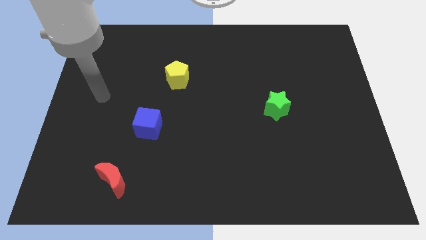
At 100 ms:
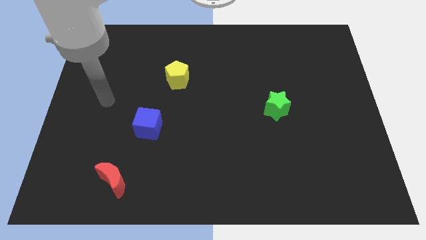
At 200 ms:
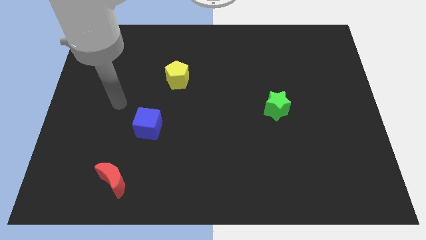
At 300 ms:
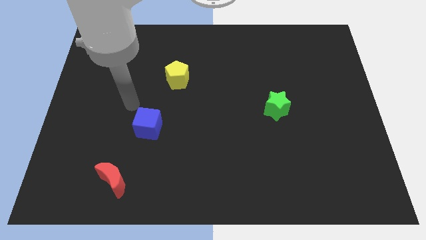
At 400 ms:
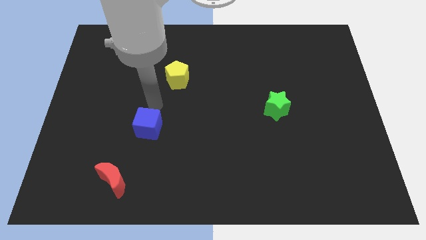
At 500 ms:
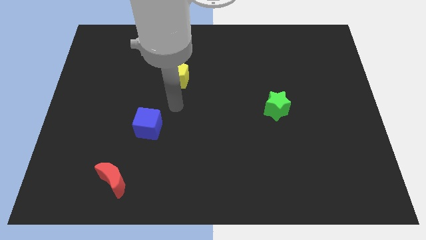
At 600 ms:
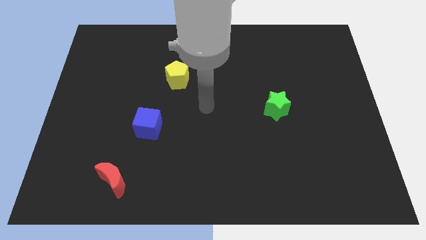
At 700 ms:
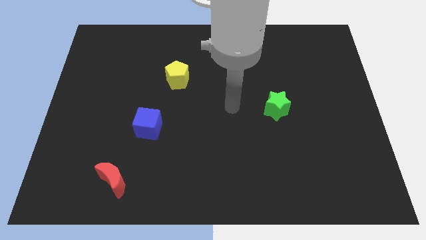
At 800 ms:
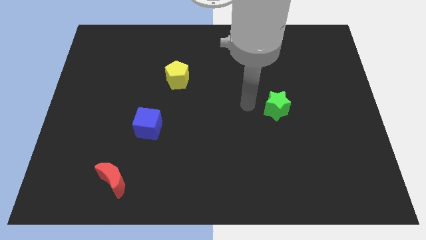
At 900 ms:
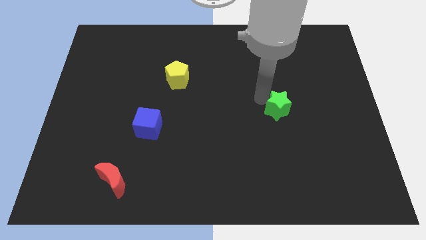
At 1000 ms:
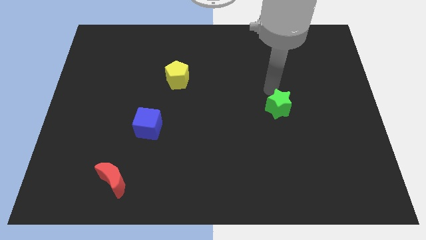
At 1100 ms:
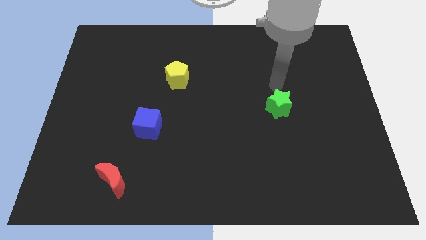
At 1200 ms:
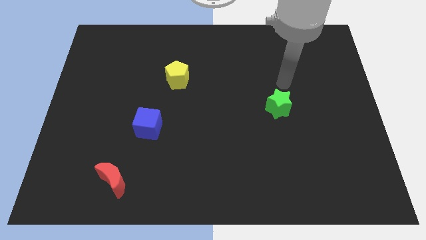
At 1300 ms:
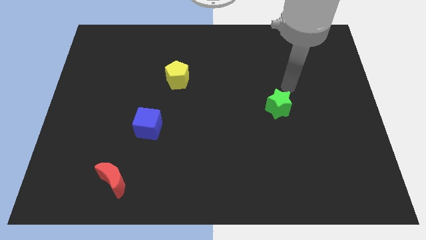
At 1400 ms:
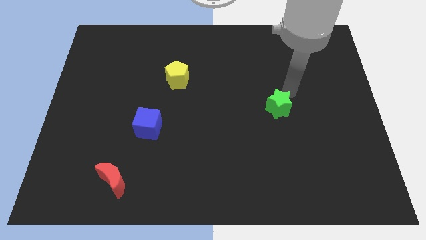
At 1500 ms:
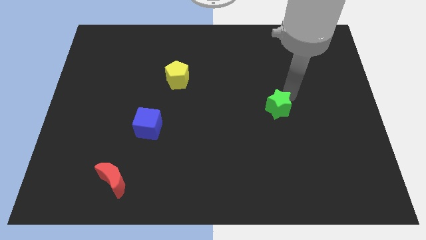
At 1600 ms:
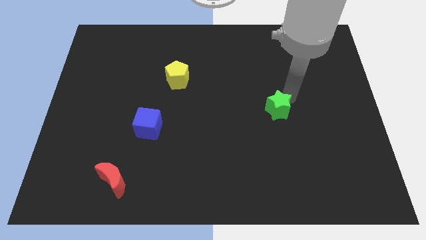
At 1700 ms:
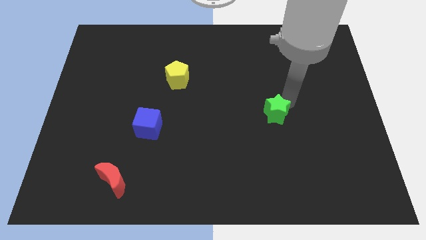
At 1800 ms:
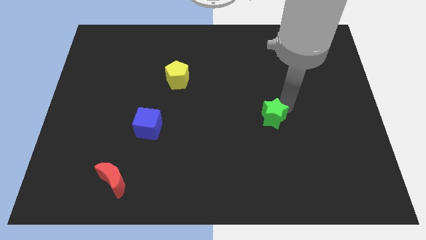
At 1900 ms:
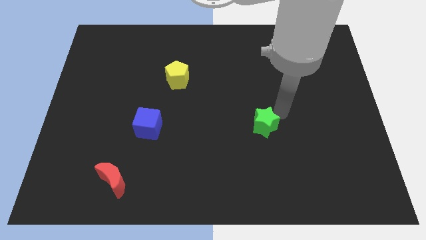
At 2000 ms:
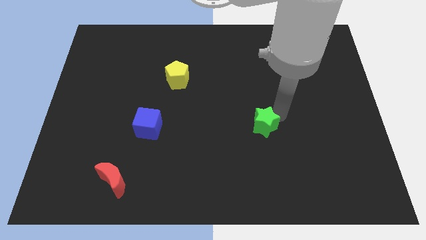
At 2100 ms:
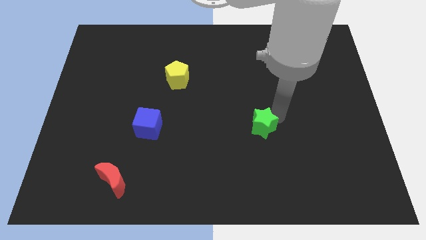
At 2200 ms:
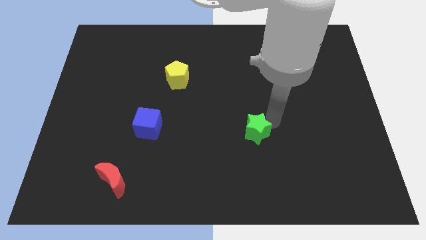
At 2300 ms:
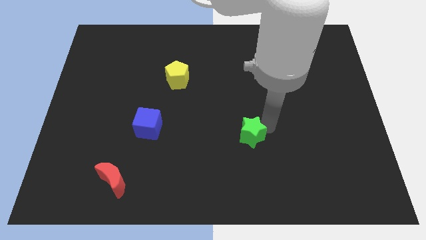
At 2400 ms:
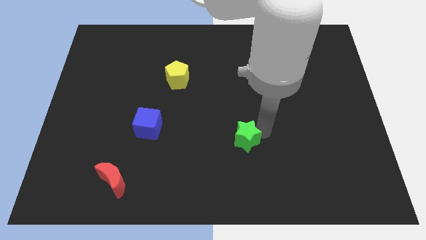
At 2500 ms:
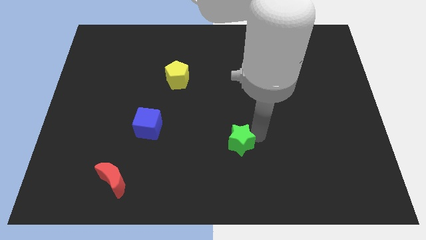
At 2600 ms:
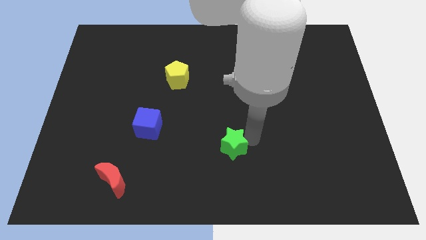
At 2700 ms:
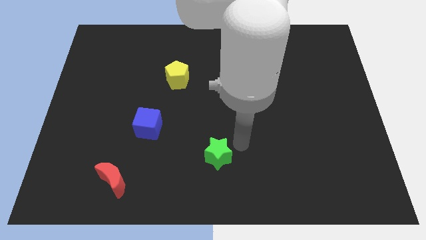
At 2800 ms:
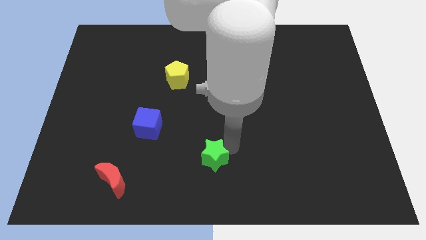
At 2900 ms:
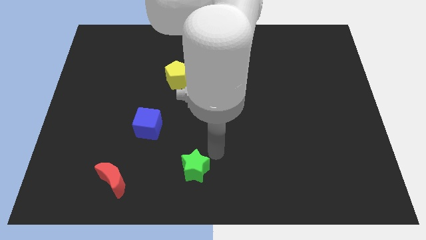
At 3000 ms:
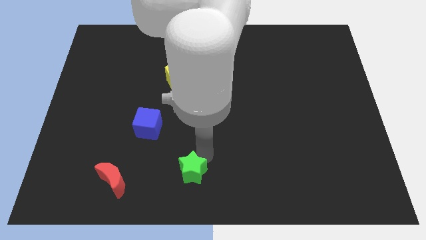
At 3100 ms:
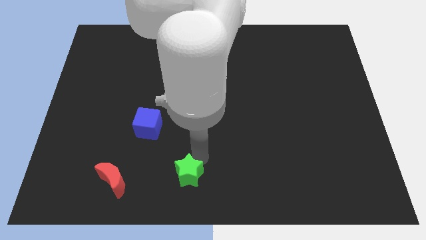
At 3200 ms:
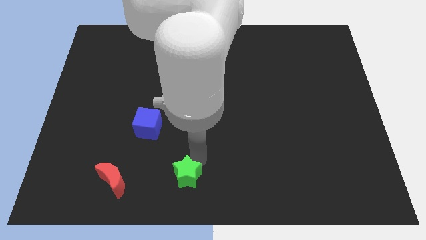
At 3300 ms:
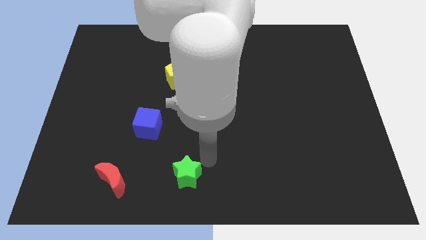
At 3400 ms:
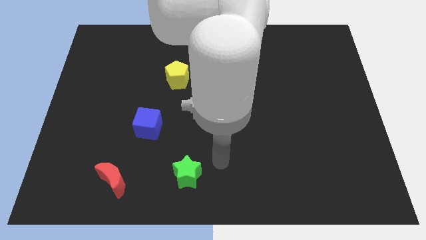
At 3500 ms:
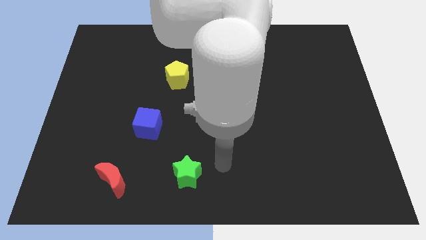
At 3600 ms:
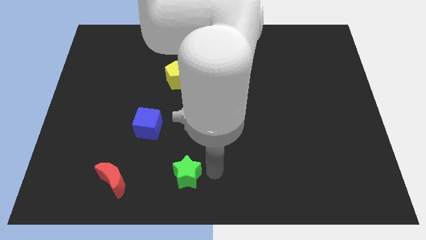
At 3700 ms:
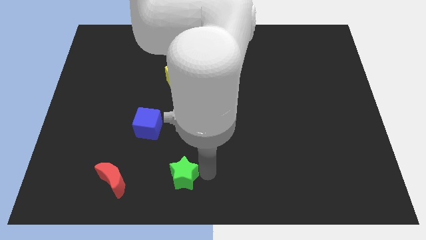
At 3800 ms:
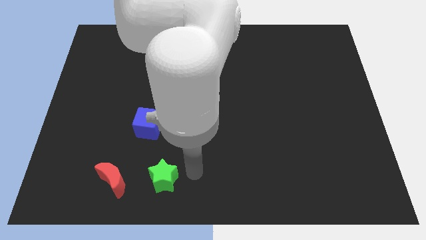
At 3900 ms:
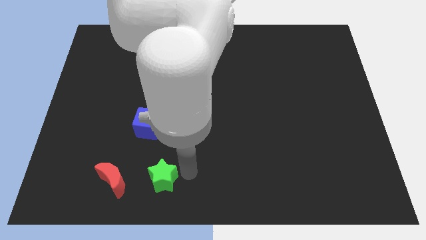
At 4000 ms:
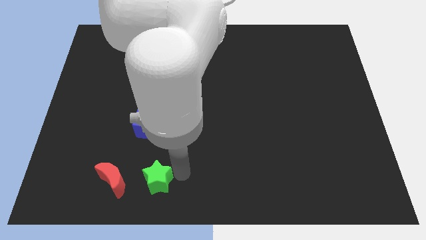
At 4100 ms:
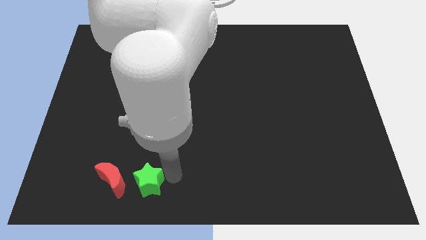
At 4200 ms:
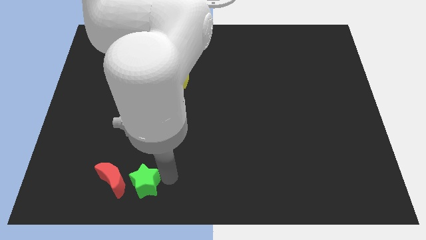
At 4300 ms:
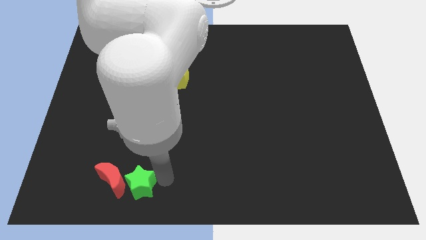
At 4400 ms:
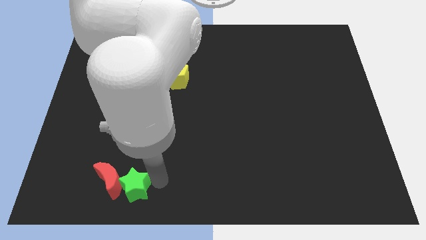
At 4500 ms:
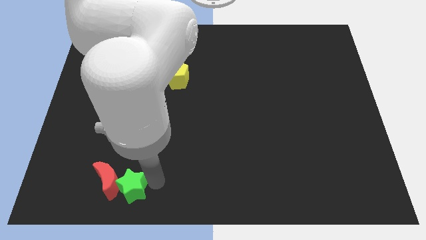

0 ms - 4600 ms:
move the star towards the red block

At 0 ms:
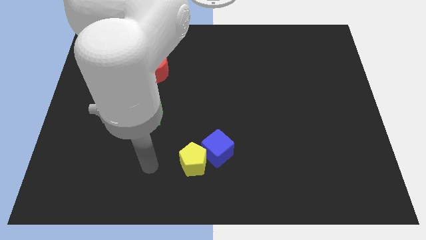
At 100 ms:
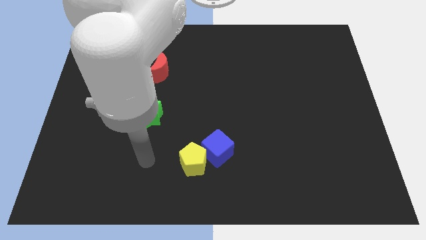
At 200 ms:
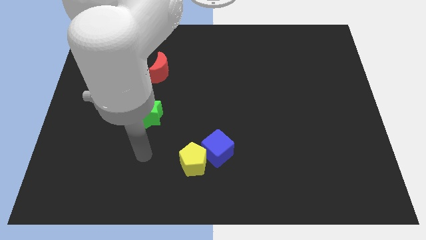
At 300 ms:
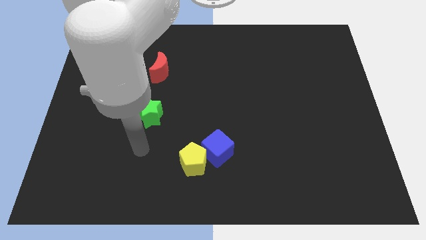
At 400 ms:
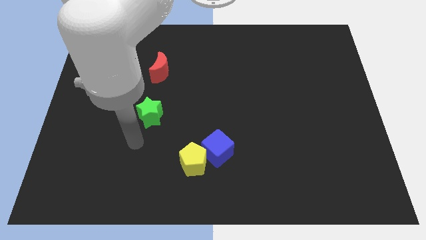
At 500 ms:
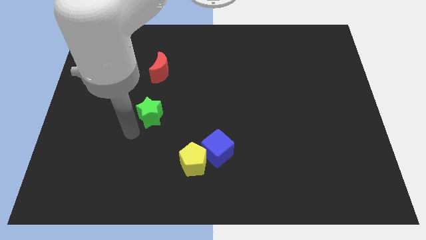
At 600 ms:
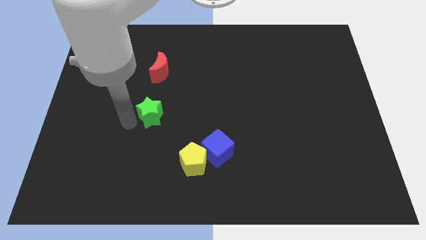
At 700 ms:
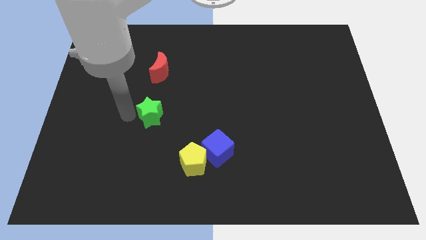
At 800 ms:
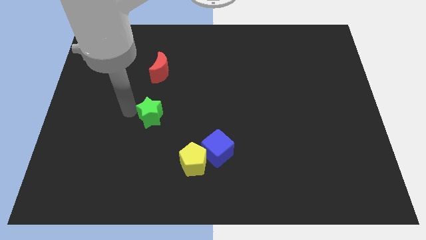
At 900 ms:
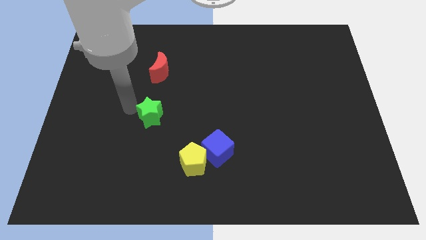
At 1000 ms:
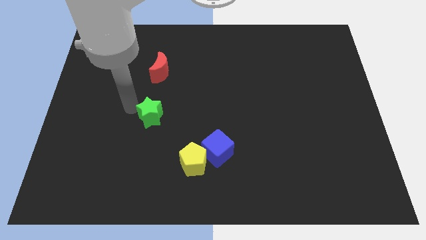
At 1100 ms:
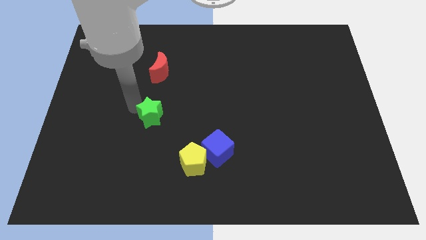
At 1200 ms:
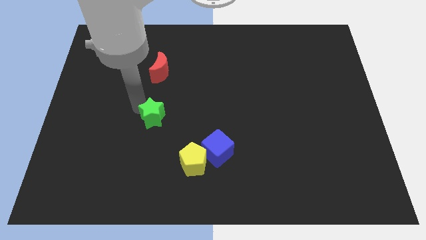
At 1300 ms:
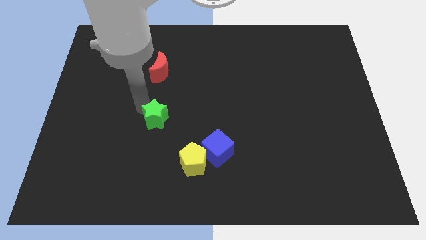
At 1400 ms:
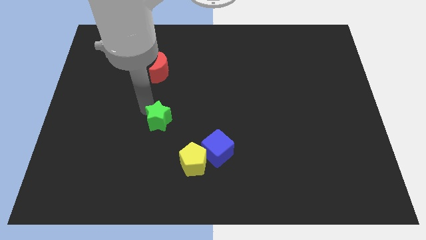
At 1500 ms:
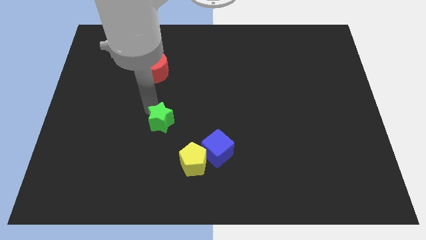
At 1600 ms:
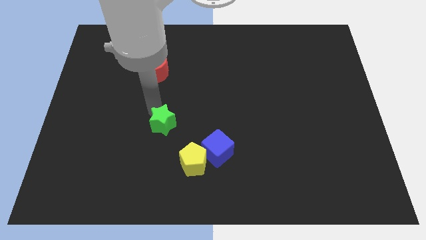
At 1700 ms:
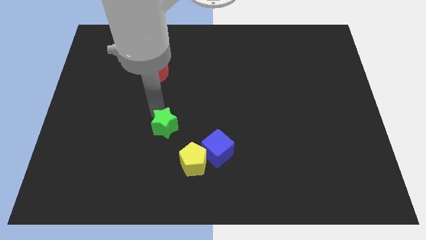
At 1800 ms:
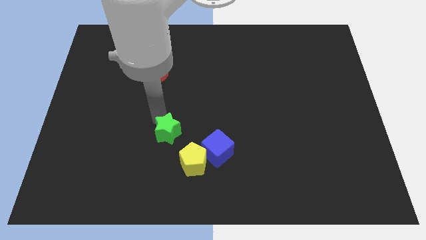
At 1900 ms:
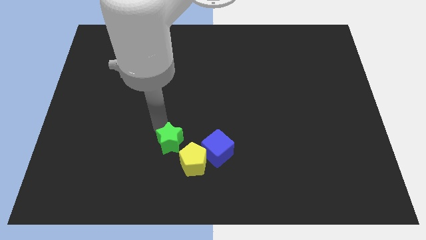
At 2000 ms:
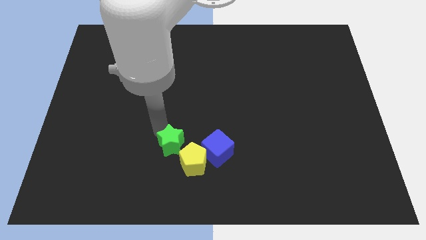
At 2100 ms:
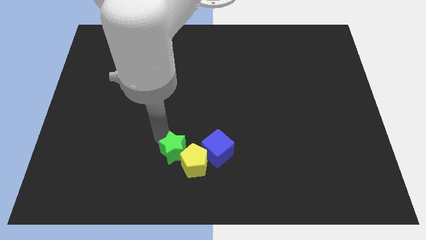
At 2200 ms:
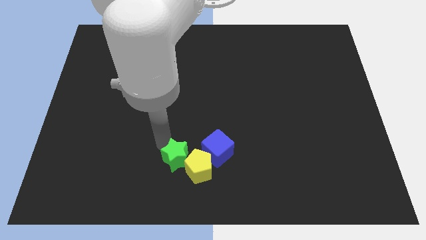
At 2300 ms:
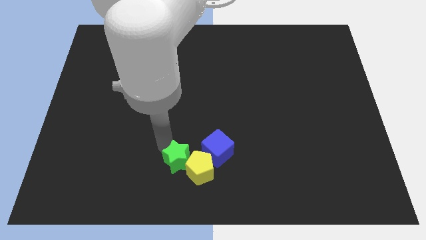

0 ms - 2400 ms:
put the star to the pentagon

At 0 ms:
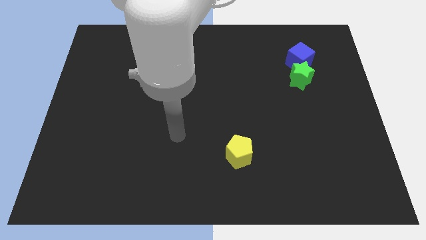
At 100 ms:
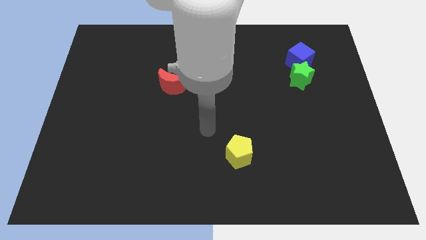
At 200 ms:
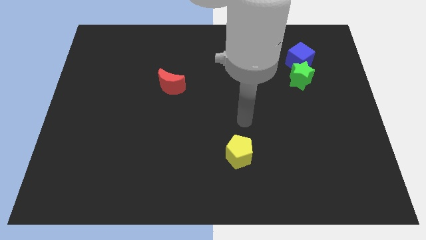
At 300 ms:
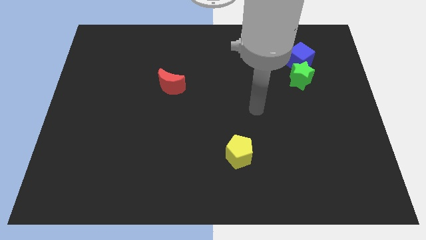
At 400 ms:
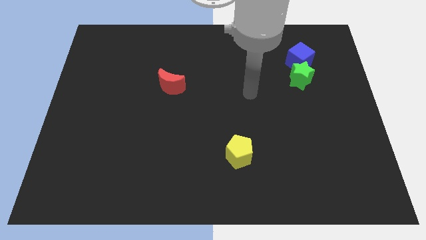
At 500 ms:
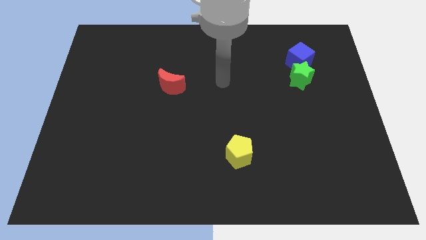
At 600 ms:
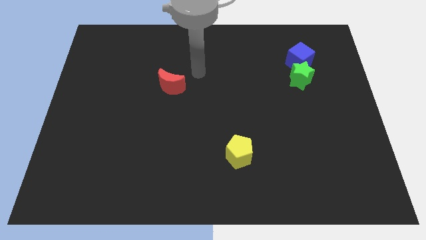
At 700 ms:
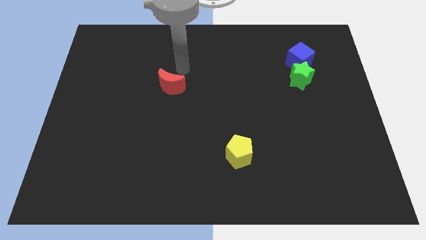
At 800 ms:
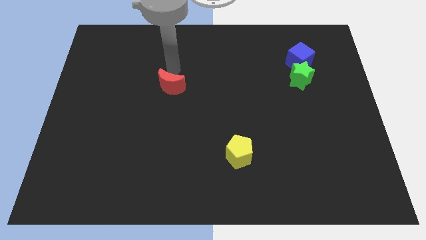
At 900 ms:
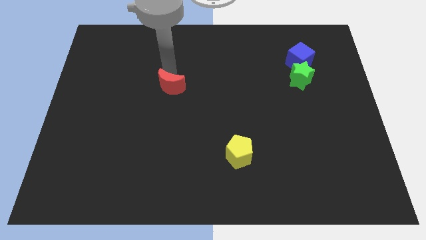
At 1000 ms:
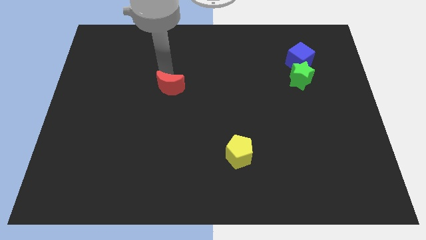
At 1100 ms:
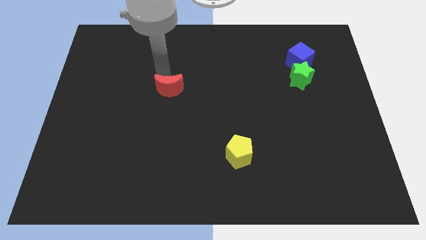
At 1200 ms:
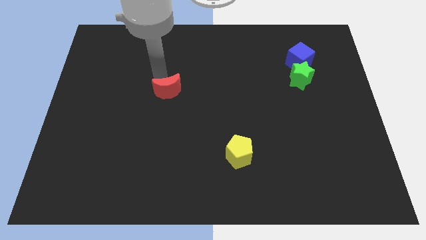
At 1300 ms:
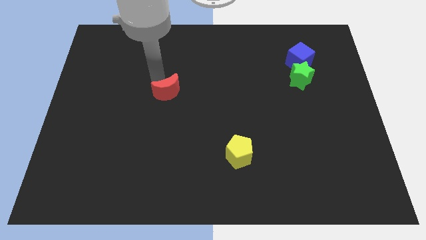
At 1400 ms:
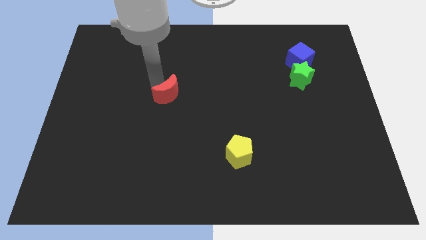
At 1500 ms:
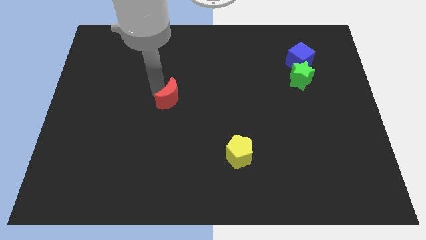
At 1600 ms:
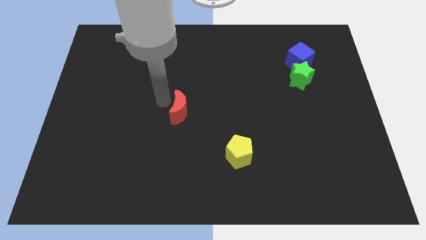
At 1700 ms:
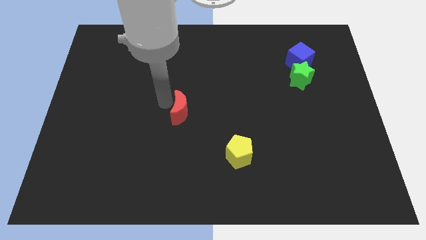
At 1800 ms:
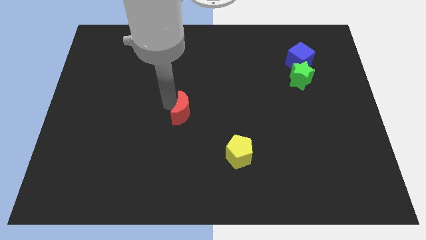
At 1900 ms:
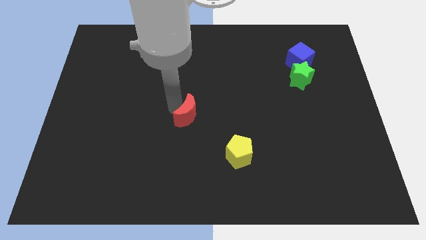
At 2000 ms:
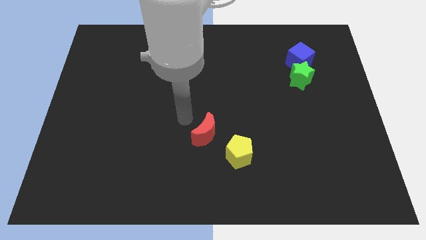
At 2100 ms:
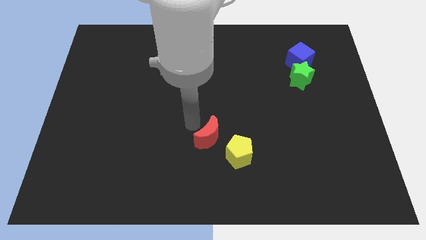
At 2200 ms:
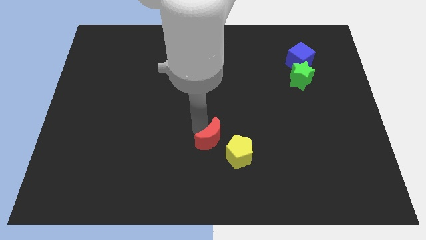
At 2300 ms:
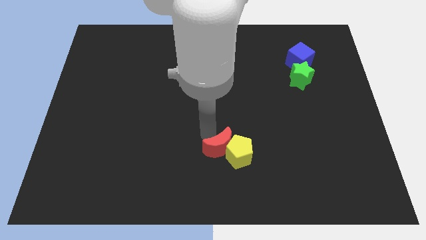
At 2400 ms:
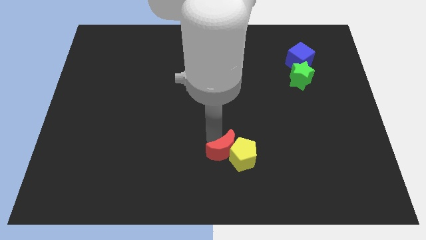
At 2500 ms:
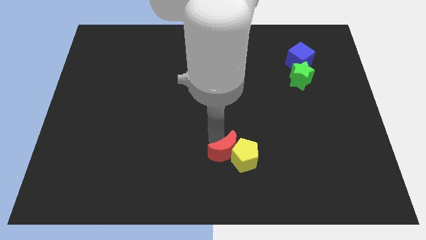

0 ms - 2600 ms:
push the moon towards the yellow block
